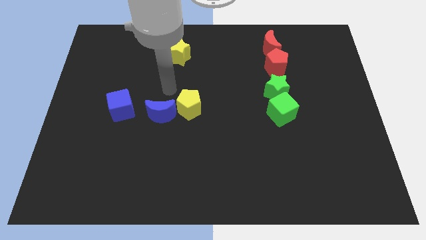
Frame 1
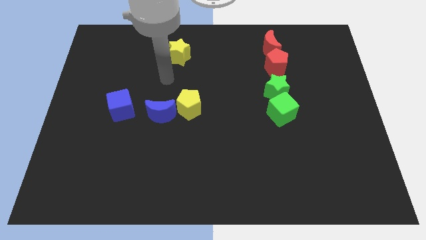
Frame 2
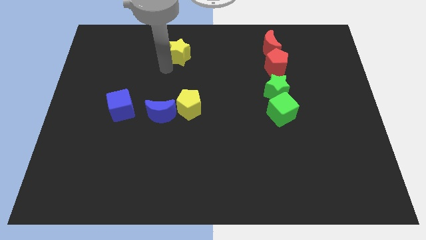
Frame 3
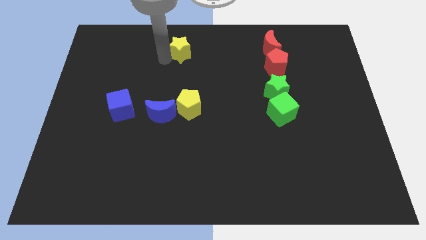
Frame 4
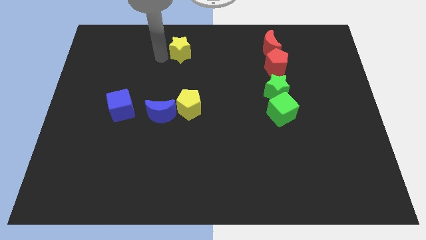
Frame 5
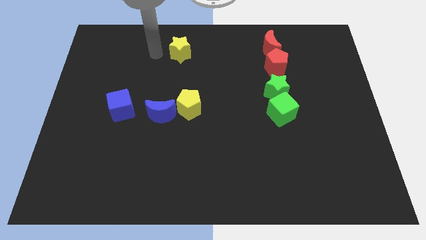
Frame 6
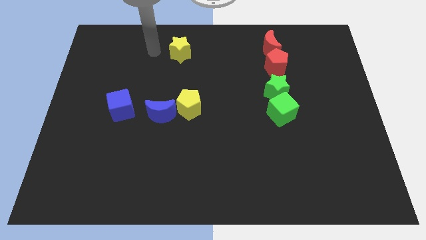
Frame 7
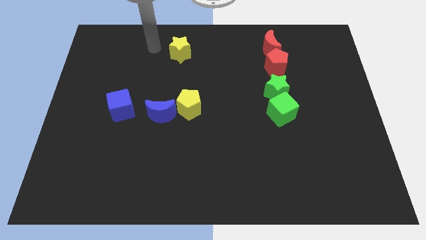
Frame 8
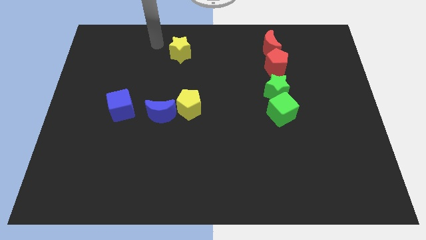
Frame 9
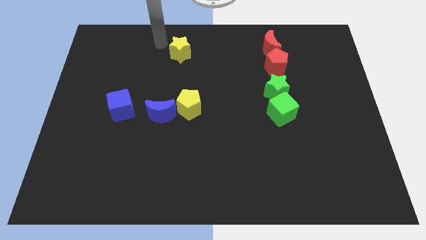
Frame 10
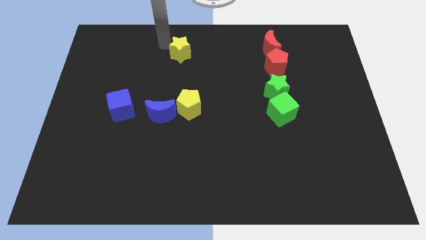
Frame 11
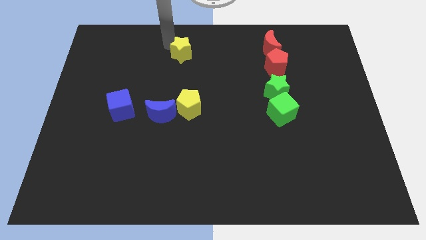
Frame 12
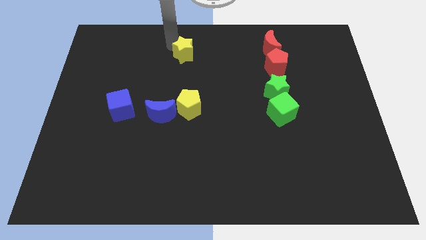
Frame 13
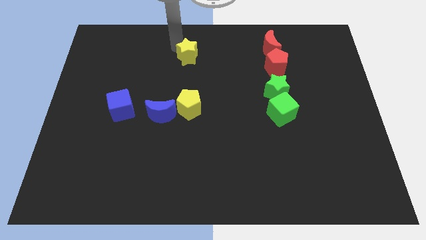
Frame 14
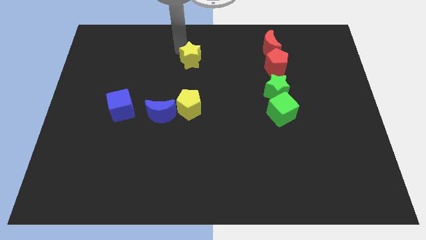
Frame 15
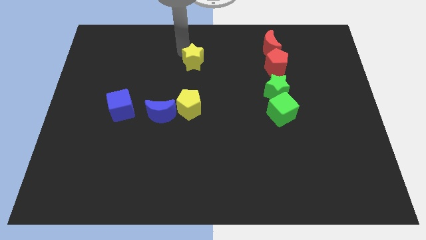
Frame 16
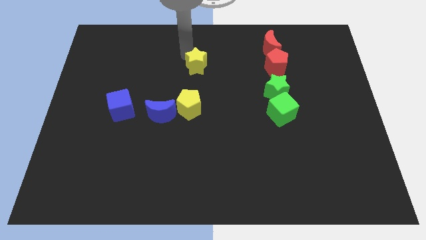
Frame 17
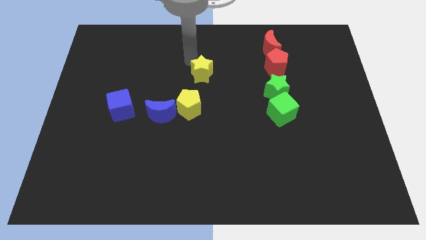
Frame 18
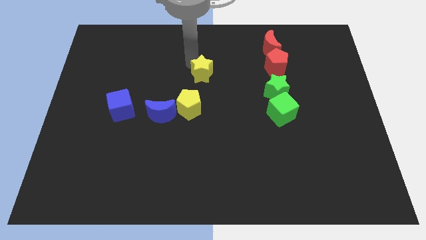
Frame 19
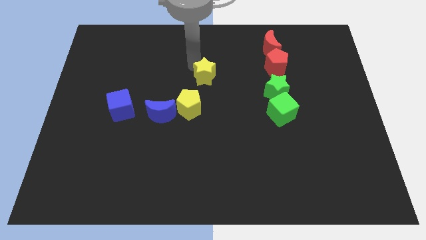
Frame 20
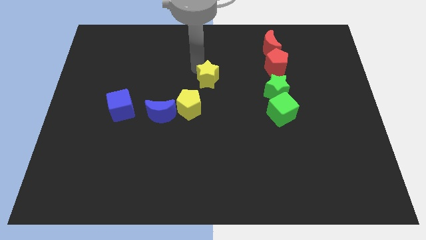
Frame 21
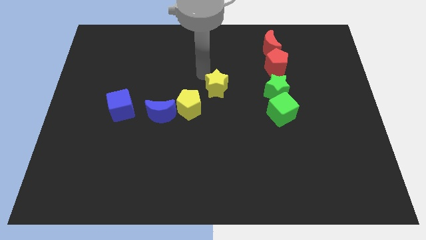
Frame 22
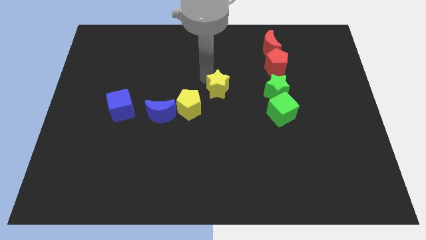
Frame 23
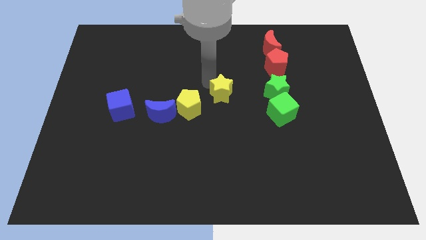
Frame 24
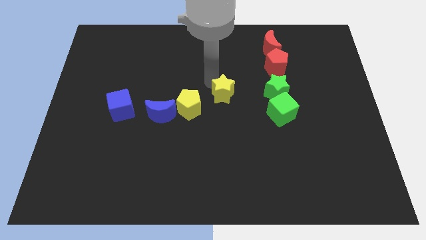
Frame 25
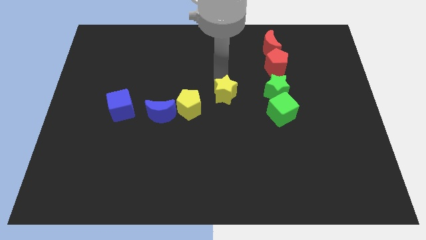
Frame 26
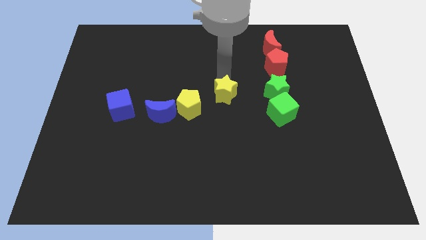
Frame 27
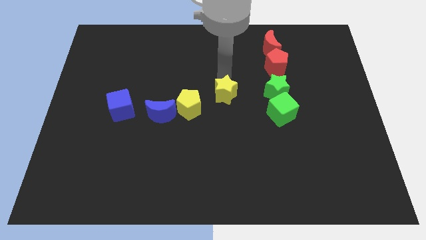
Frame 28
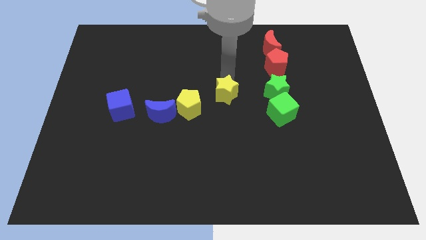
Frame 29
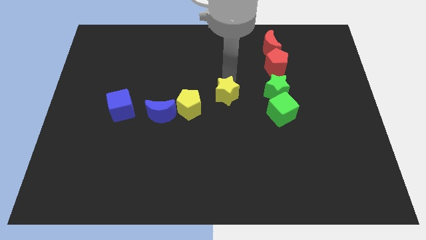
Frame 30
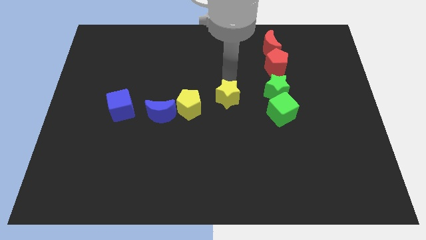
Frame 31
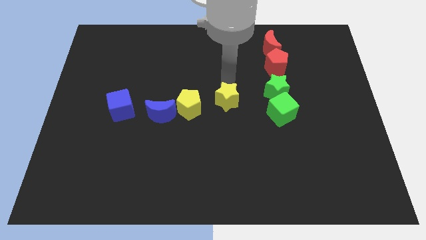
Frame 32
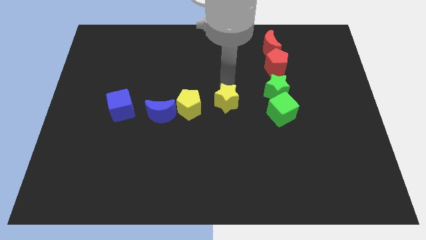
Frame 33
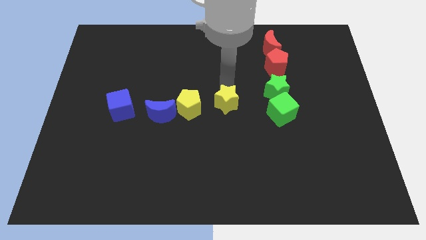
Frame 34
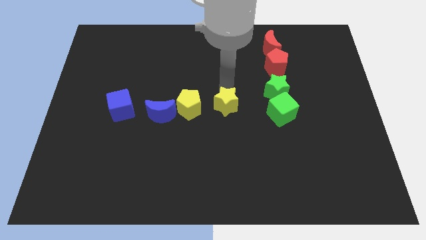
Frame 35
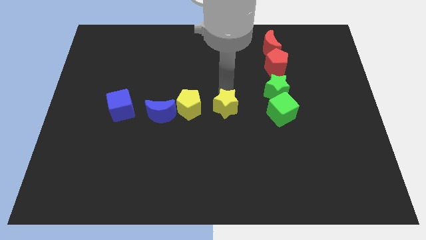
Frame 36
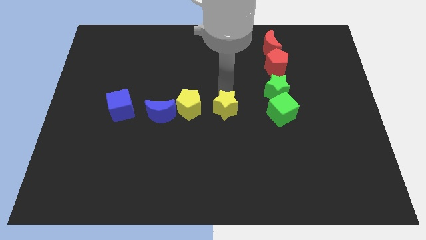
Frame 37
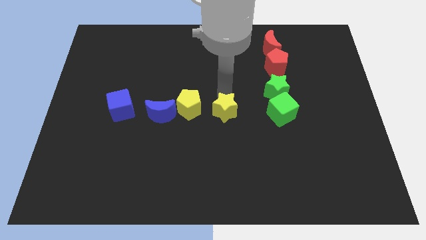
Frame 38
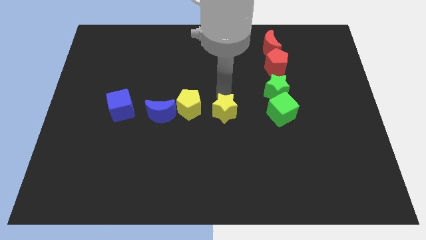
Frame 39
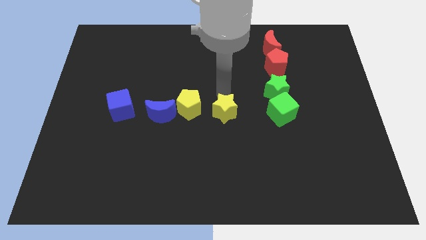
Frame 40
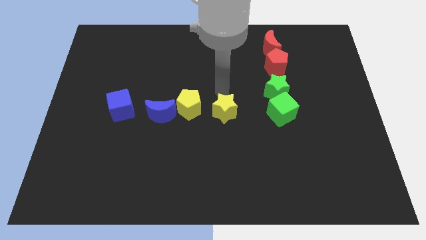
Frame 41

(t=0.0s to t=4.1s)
put the yellow star parallel right to the yellow pentagon

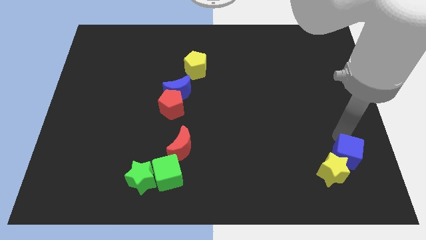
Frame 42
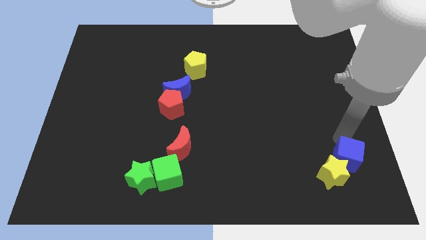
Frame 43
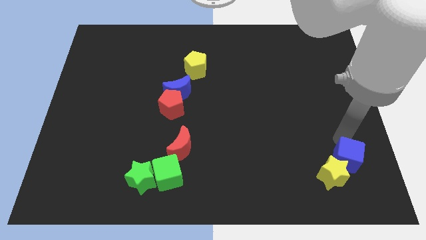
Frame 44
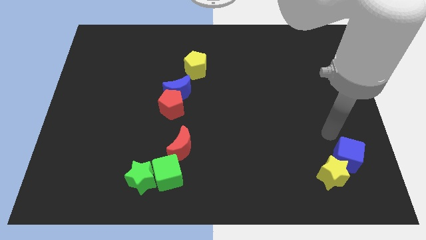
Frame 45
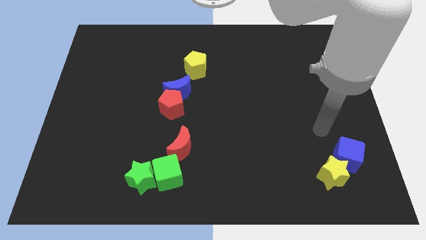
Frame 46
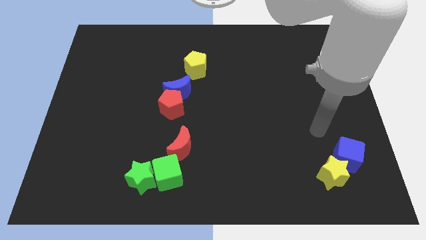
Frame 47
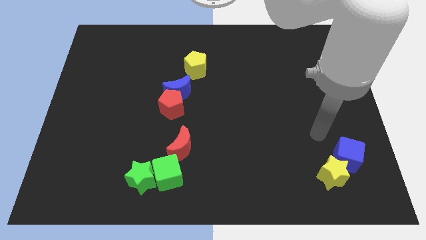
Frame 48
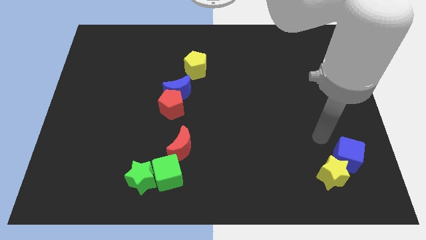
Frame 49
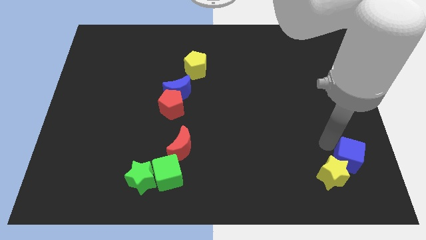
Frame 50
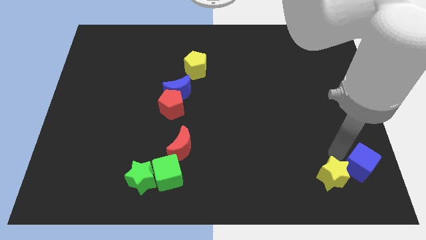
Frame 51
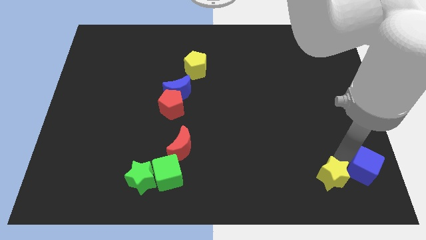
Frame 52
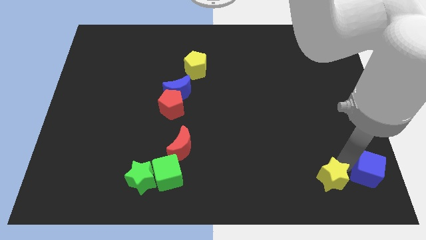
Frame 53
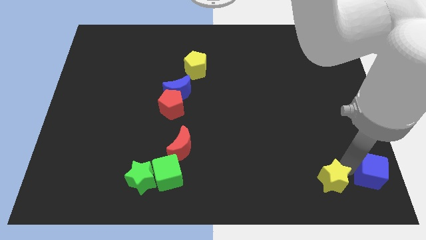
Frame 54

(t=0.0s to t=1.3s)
move the blue cube to the right of the yellow star

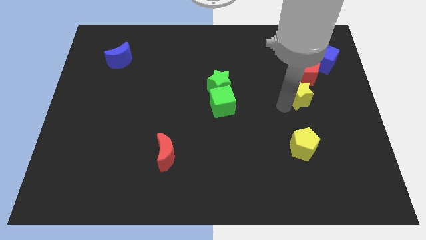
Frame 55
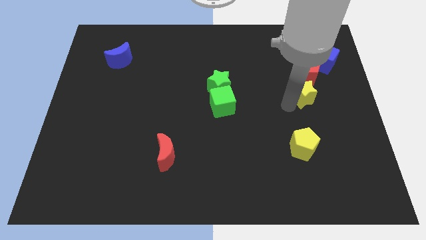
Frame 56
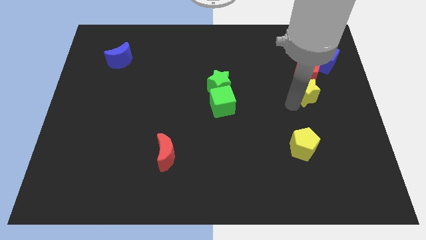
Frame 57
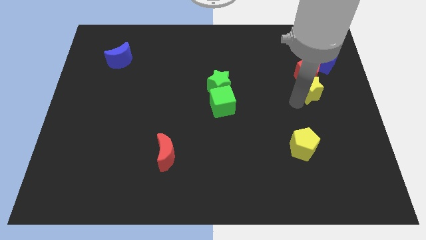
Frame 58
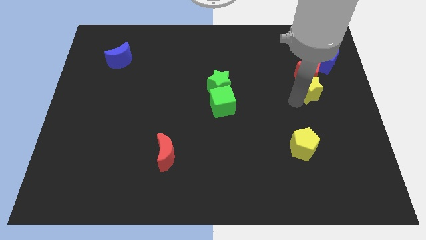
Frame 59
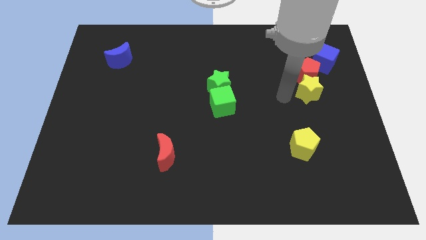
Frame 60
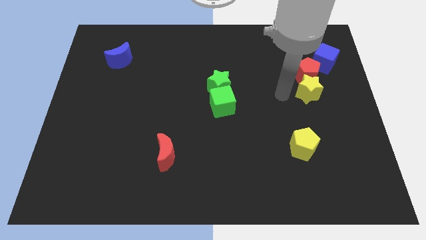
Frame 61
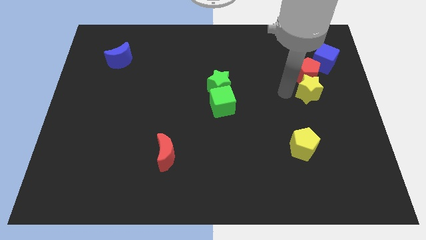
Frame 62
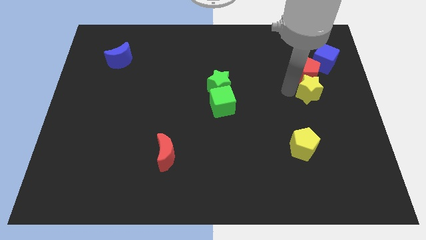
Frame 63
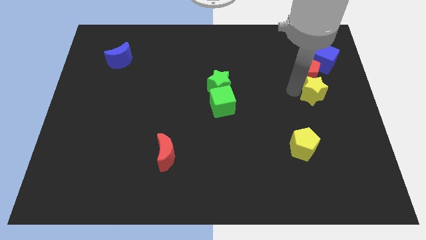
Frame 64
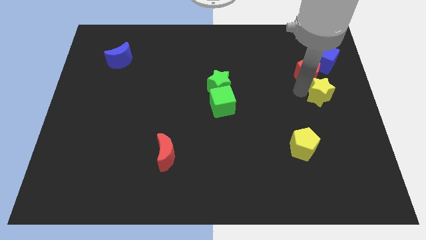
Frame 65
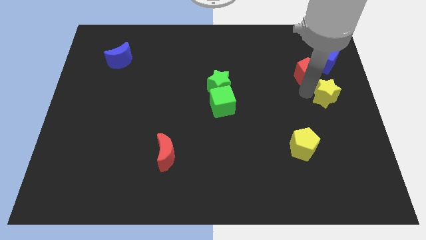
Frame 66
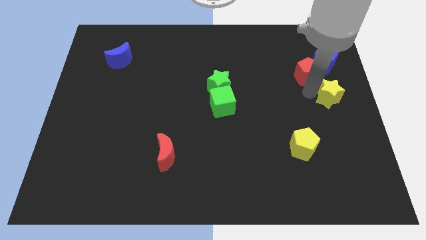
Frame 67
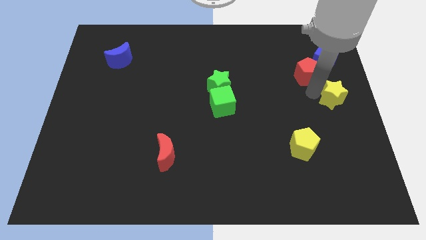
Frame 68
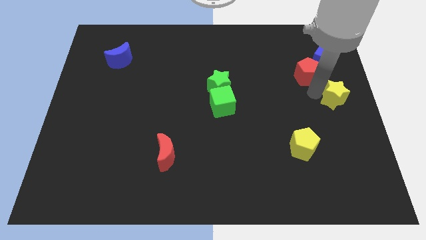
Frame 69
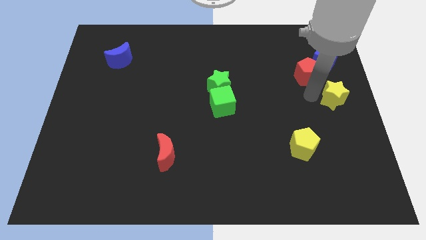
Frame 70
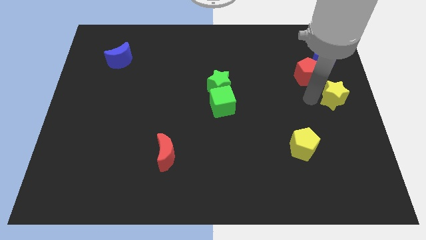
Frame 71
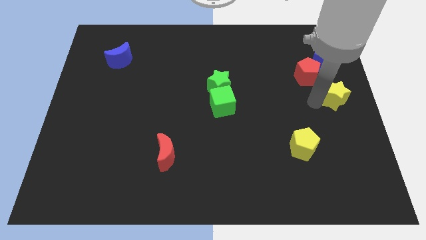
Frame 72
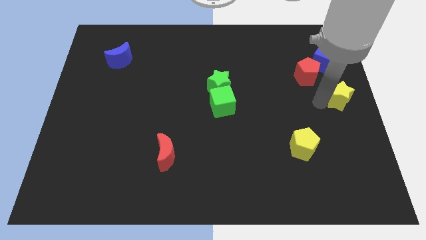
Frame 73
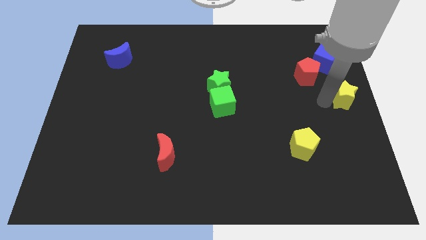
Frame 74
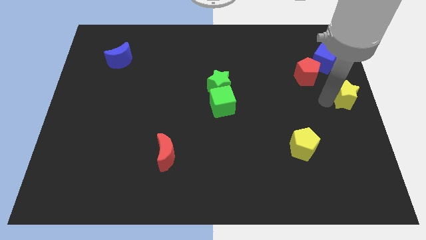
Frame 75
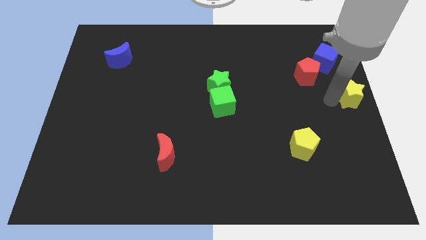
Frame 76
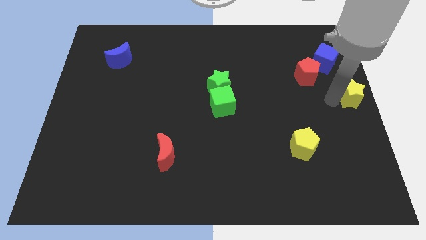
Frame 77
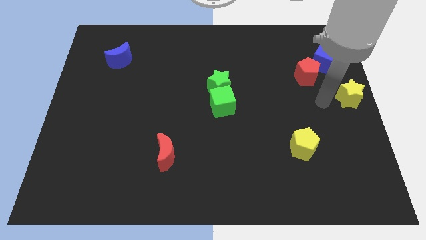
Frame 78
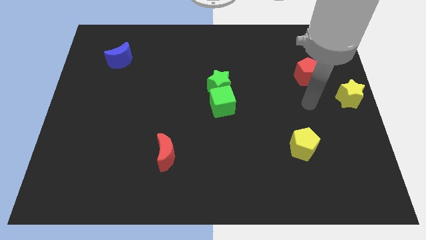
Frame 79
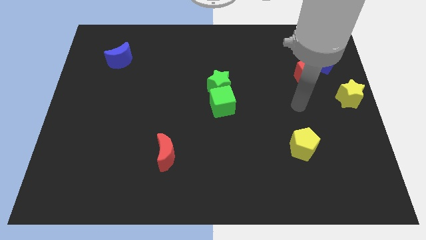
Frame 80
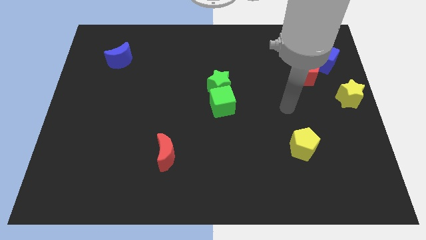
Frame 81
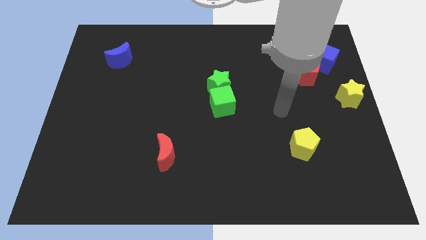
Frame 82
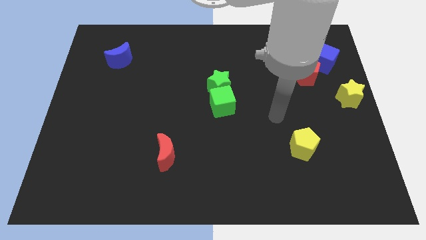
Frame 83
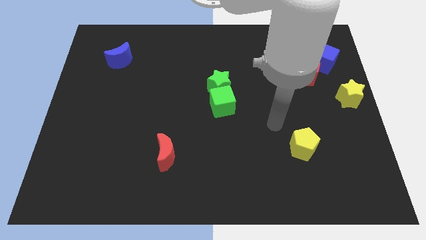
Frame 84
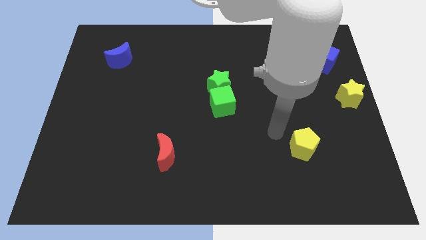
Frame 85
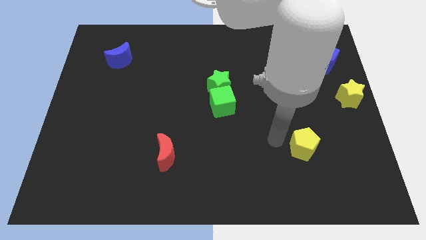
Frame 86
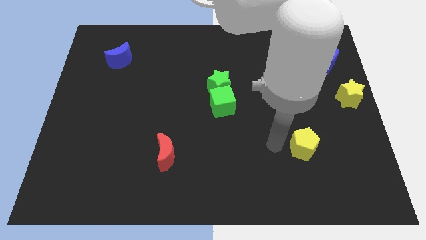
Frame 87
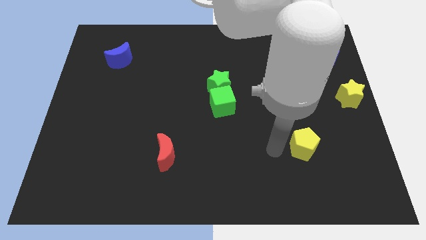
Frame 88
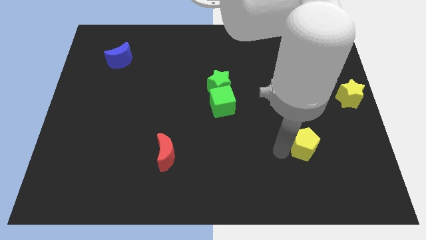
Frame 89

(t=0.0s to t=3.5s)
place the yellow star at the center right of the board
